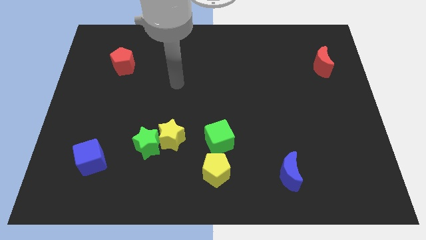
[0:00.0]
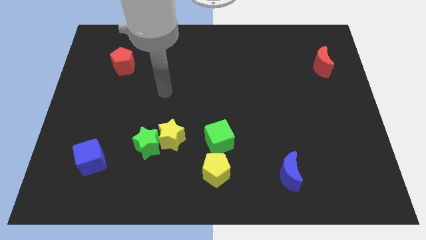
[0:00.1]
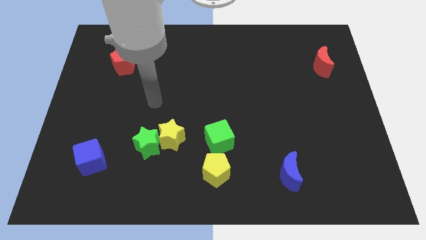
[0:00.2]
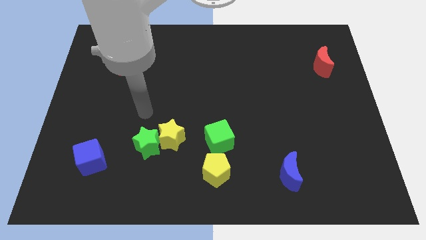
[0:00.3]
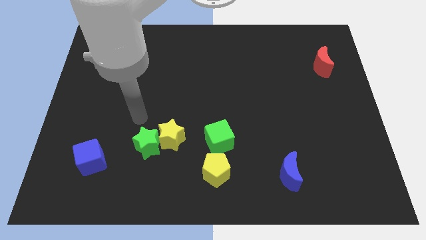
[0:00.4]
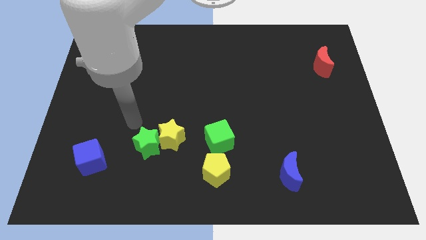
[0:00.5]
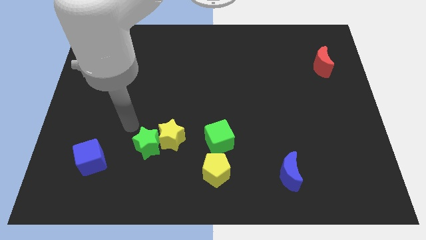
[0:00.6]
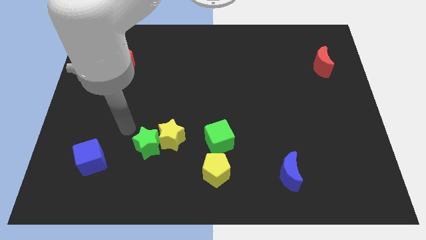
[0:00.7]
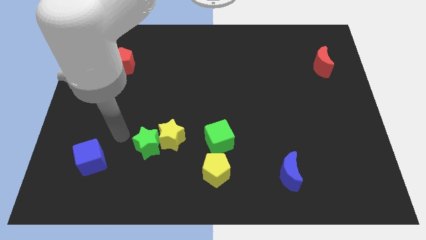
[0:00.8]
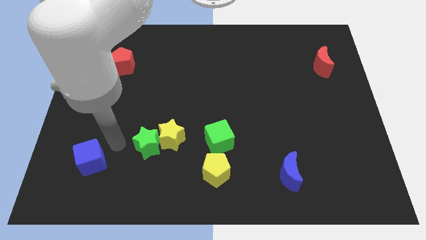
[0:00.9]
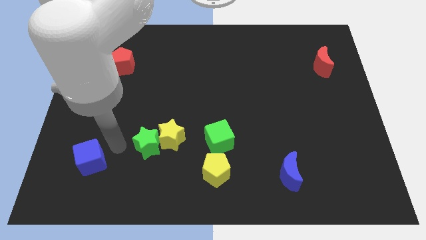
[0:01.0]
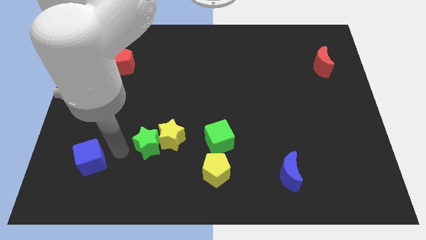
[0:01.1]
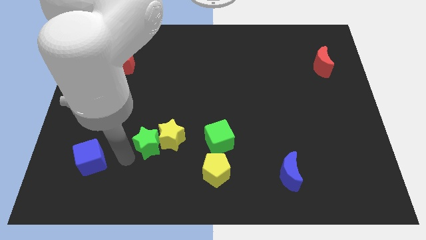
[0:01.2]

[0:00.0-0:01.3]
move your arm in between blue cube and green star

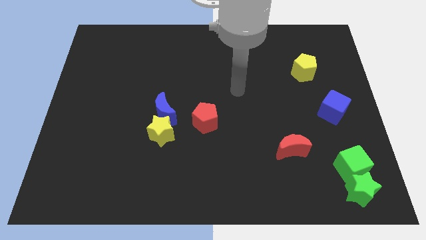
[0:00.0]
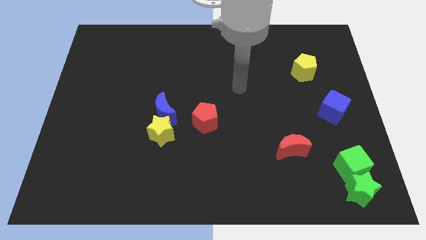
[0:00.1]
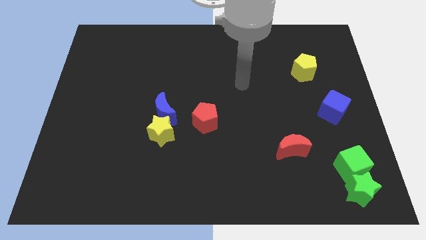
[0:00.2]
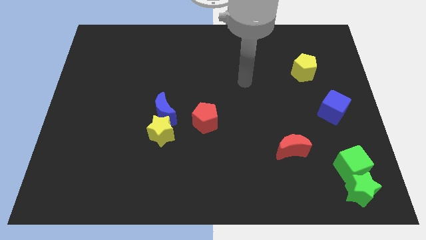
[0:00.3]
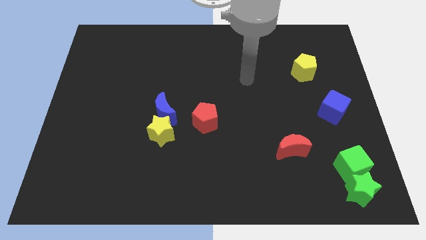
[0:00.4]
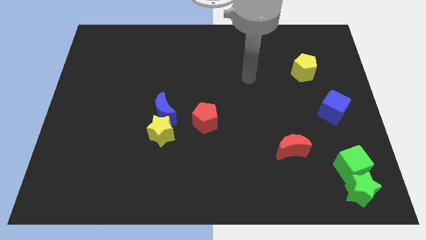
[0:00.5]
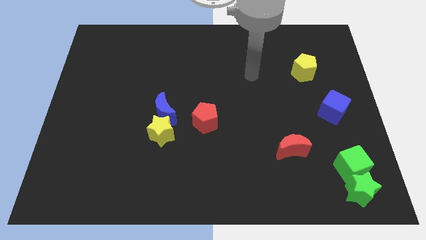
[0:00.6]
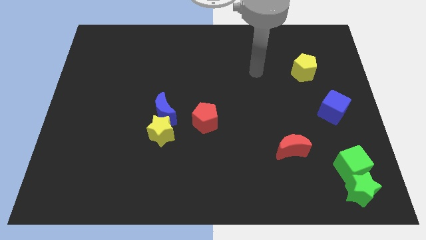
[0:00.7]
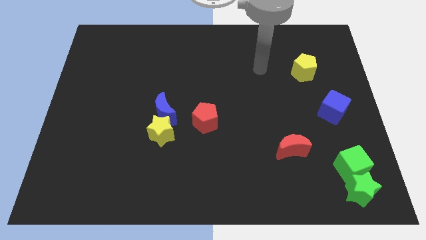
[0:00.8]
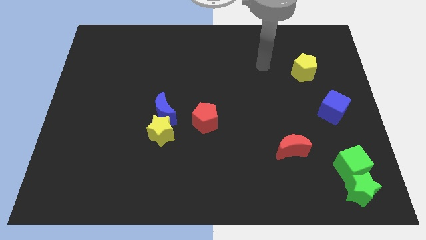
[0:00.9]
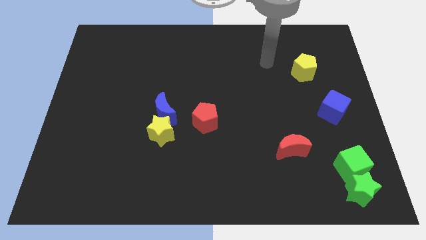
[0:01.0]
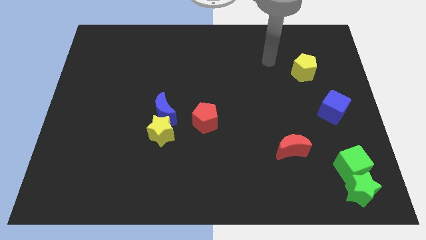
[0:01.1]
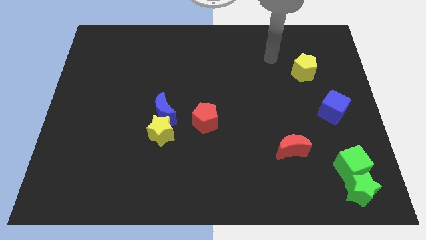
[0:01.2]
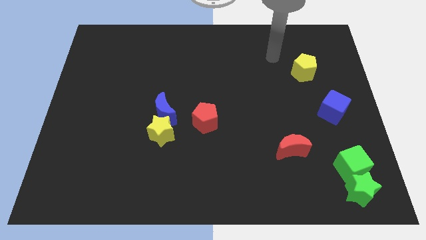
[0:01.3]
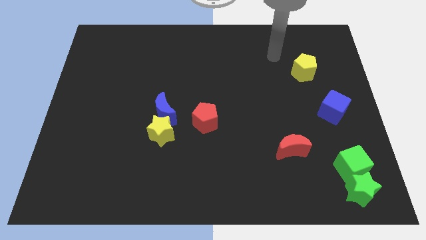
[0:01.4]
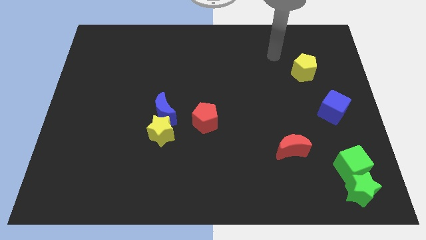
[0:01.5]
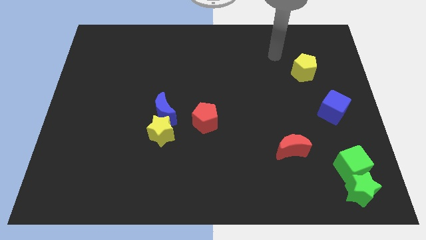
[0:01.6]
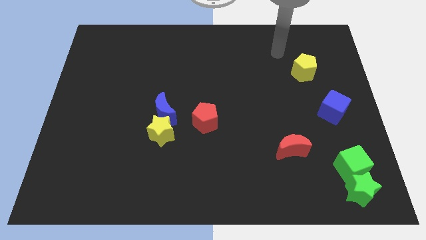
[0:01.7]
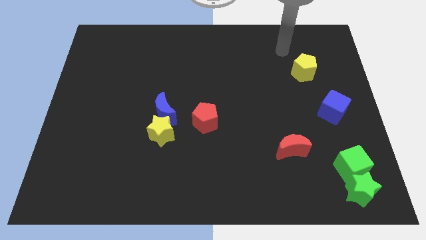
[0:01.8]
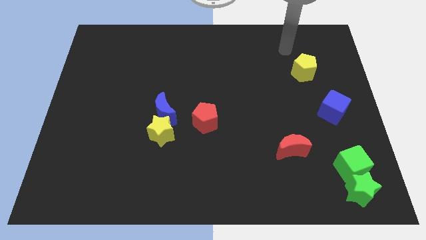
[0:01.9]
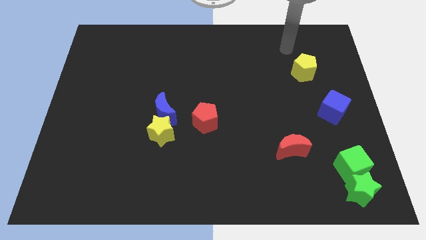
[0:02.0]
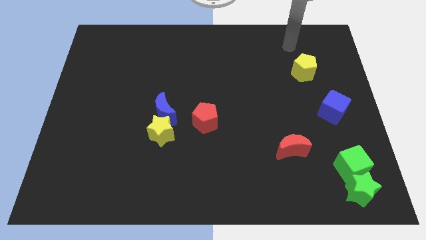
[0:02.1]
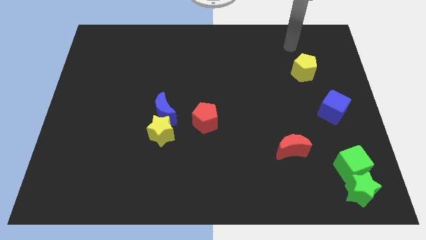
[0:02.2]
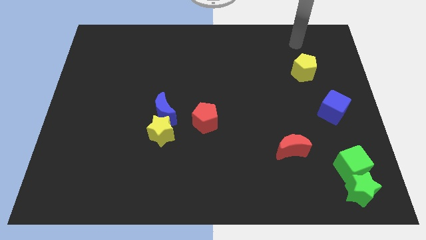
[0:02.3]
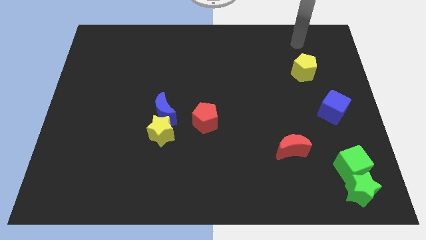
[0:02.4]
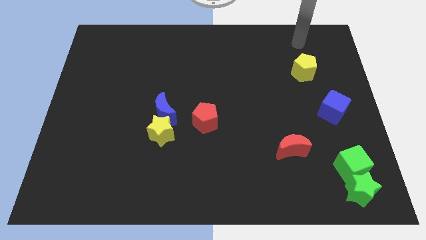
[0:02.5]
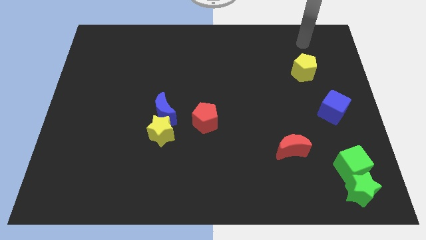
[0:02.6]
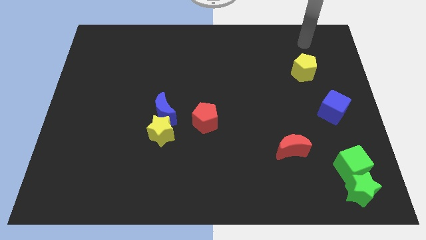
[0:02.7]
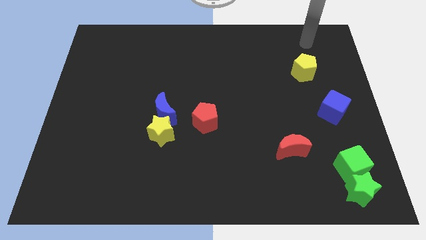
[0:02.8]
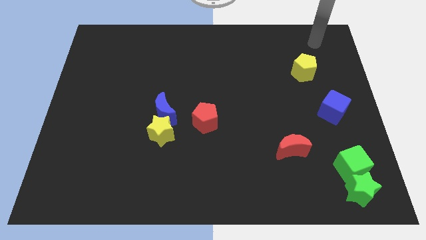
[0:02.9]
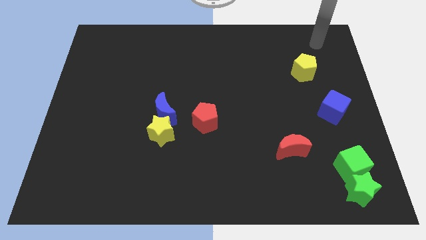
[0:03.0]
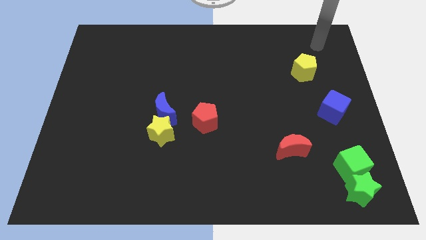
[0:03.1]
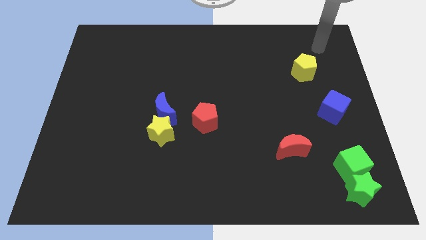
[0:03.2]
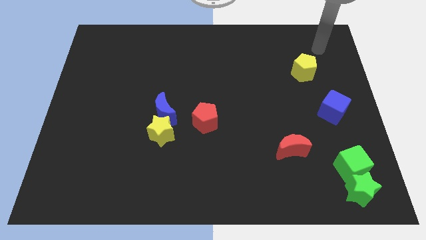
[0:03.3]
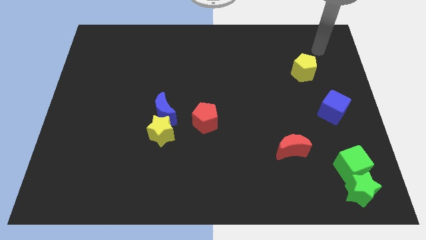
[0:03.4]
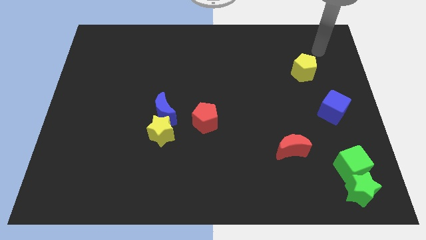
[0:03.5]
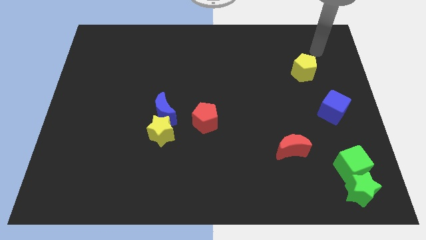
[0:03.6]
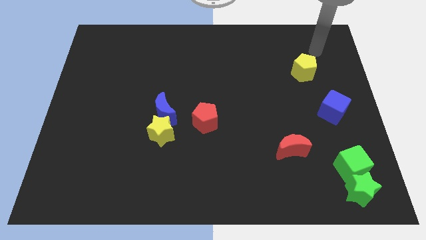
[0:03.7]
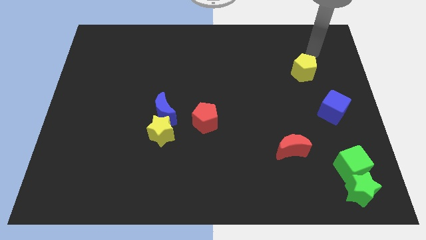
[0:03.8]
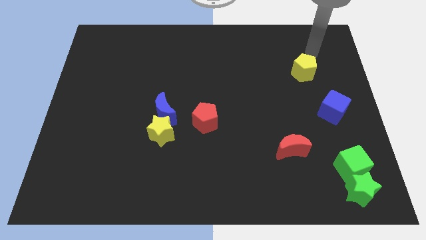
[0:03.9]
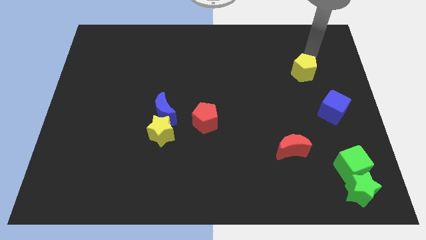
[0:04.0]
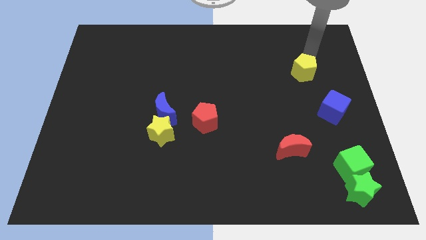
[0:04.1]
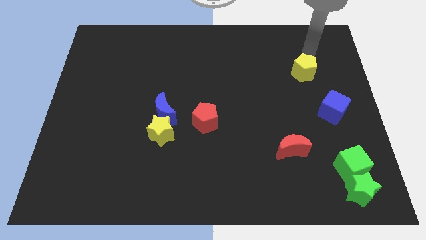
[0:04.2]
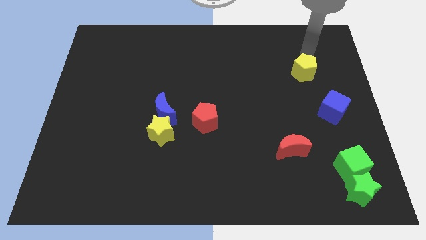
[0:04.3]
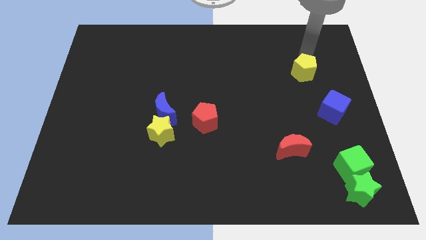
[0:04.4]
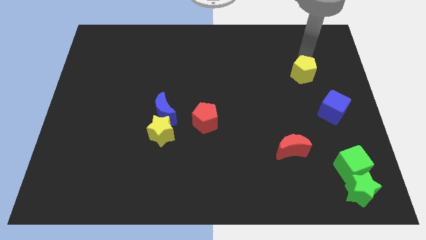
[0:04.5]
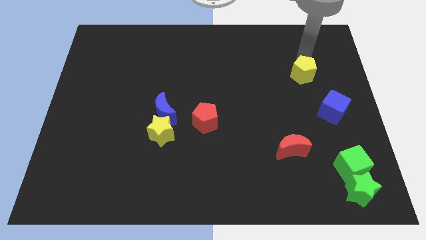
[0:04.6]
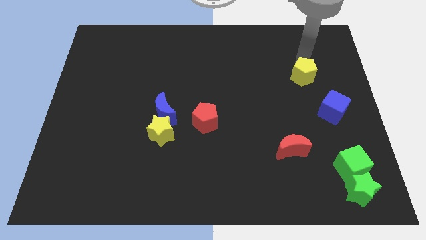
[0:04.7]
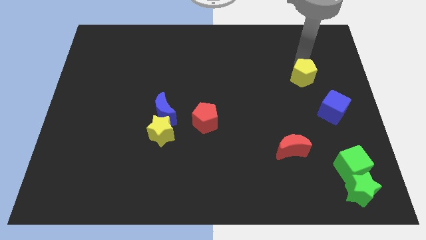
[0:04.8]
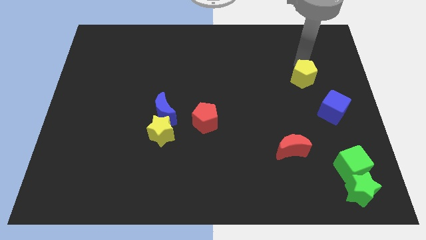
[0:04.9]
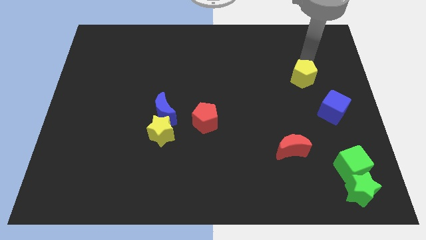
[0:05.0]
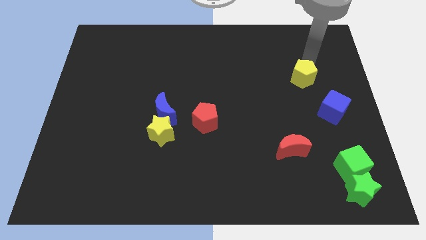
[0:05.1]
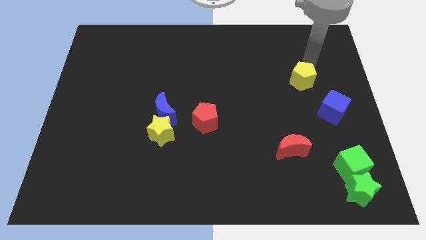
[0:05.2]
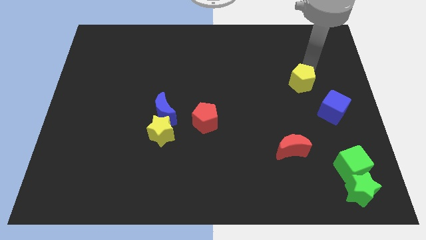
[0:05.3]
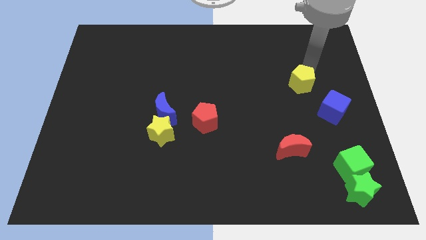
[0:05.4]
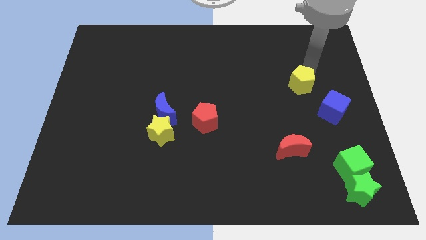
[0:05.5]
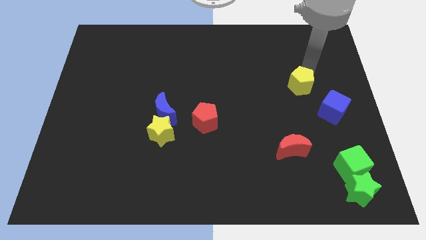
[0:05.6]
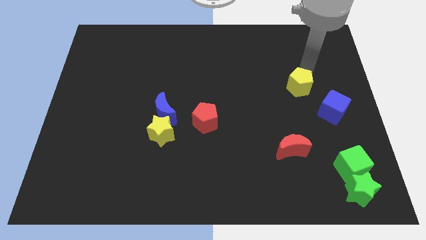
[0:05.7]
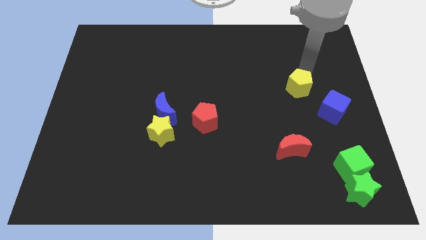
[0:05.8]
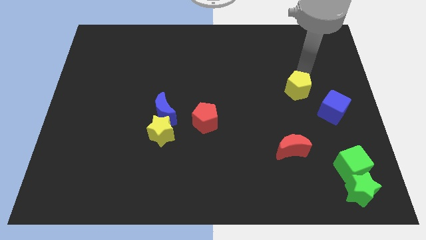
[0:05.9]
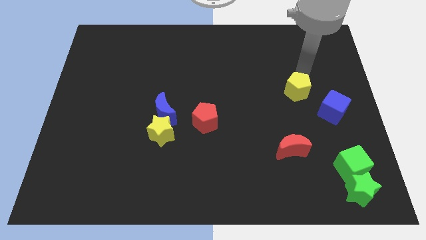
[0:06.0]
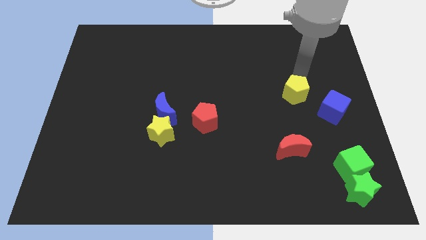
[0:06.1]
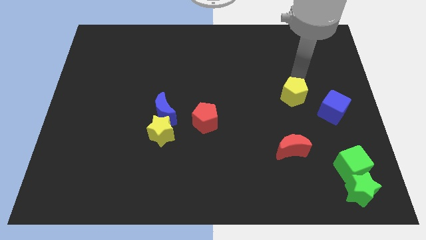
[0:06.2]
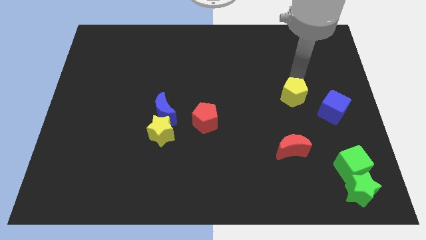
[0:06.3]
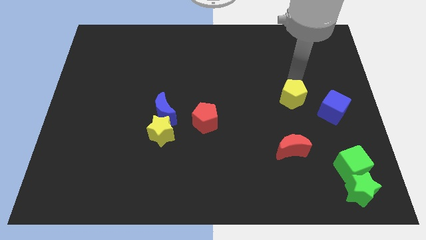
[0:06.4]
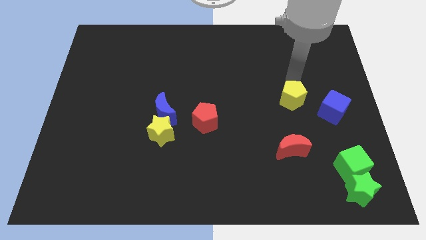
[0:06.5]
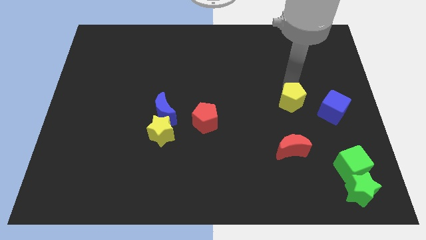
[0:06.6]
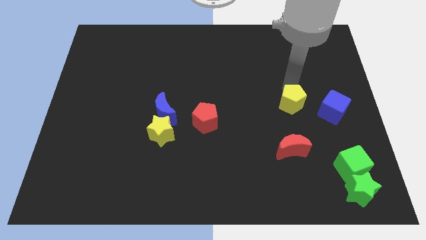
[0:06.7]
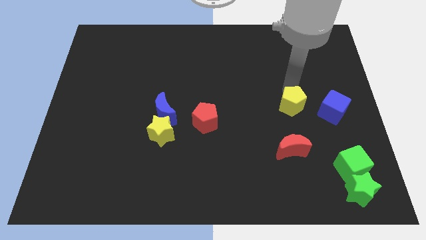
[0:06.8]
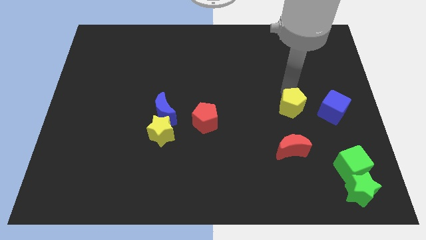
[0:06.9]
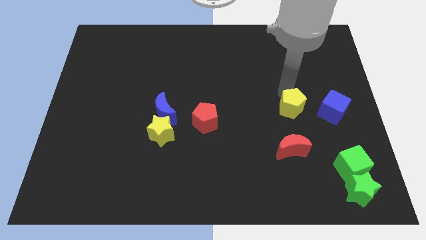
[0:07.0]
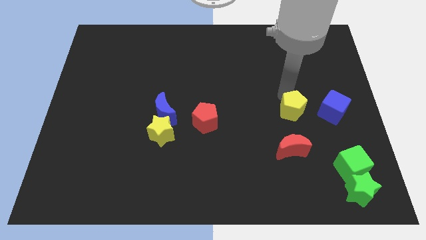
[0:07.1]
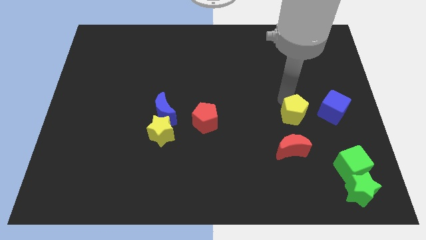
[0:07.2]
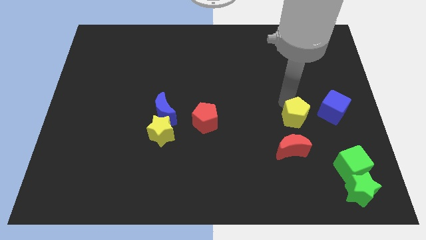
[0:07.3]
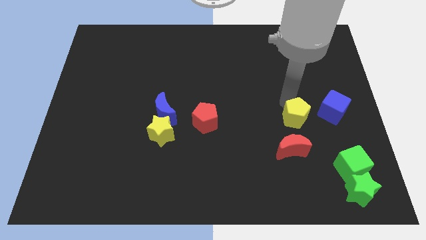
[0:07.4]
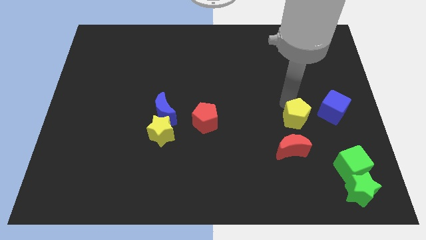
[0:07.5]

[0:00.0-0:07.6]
place the yellow pentagon above the red crescent

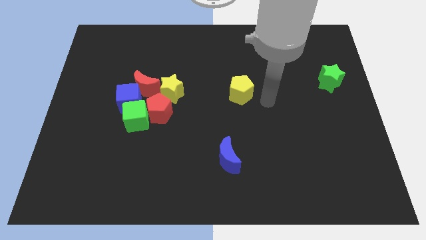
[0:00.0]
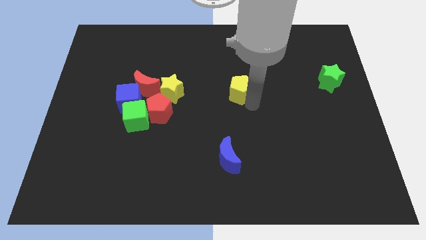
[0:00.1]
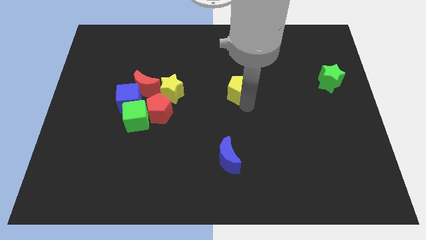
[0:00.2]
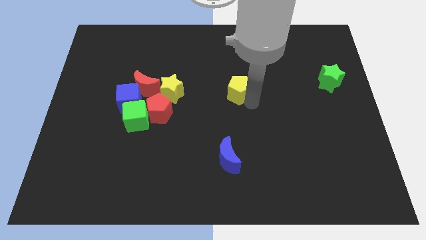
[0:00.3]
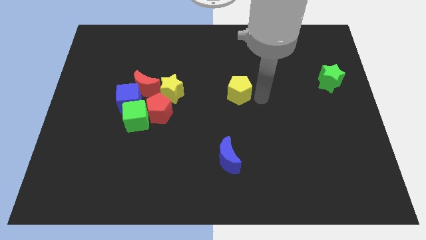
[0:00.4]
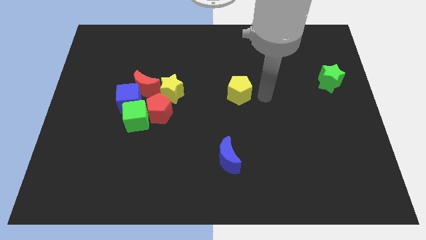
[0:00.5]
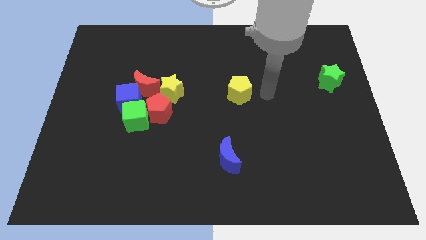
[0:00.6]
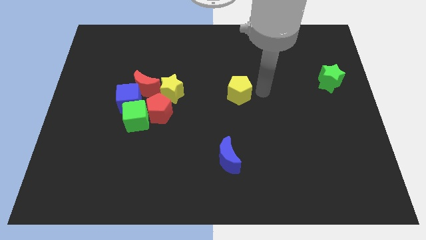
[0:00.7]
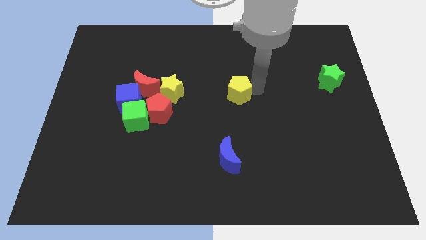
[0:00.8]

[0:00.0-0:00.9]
move your hand close to the yellow pentagon
